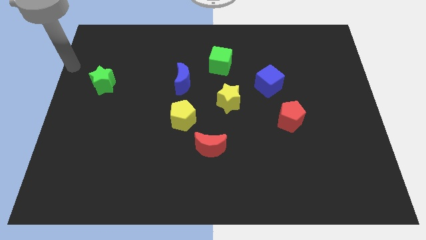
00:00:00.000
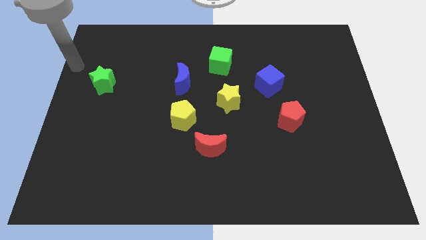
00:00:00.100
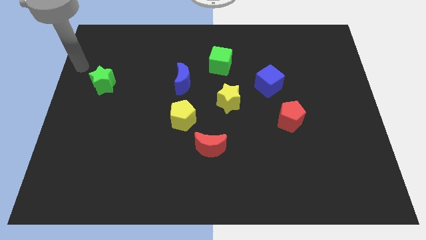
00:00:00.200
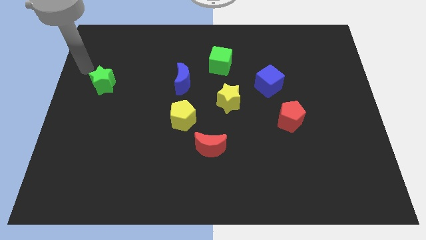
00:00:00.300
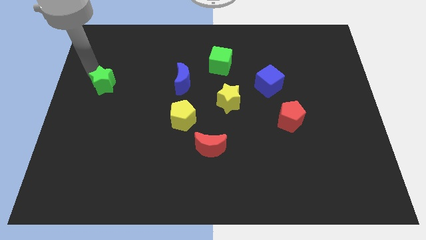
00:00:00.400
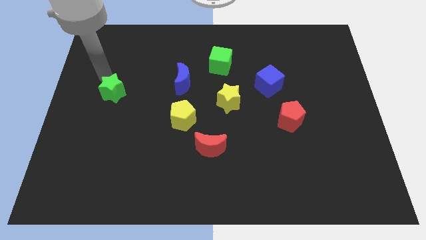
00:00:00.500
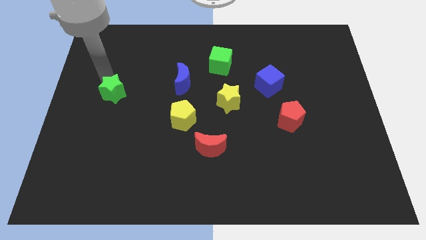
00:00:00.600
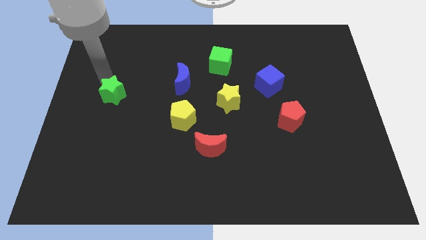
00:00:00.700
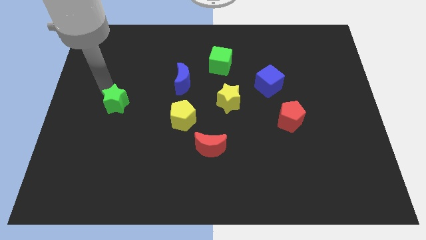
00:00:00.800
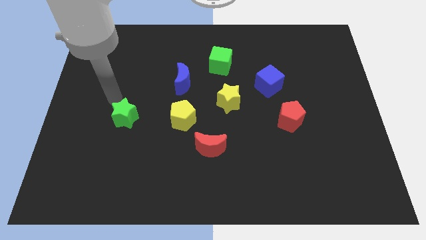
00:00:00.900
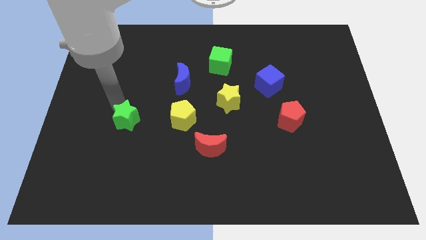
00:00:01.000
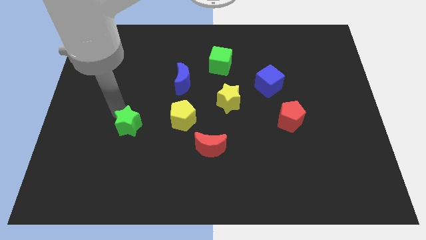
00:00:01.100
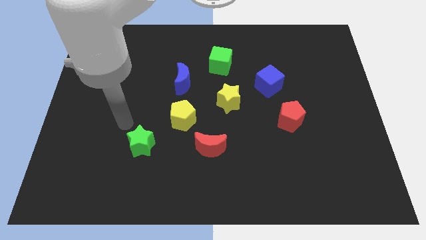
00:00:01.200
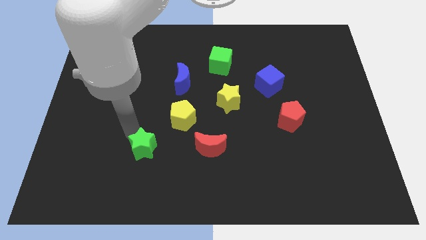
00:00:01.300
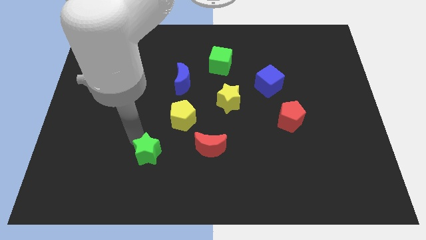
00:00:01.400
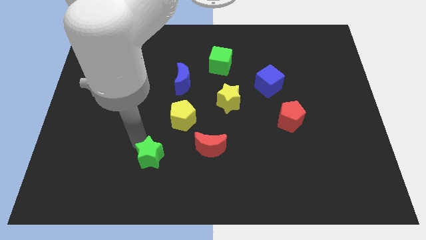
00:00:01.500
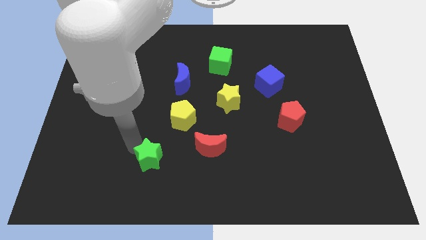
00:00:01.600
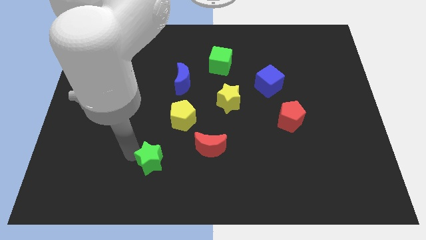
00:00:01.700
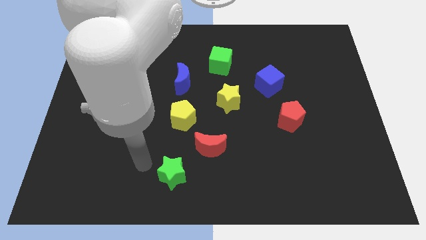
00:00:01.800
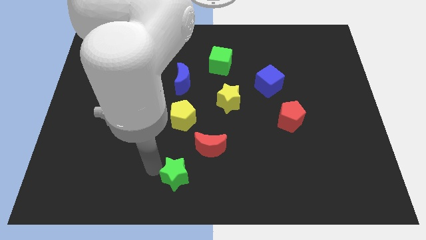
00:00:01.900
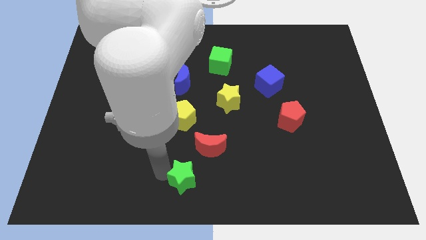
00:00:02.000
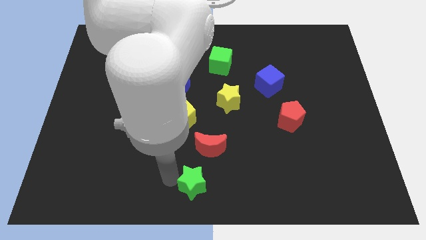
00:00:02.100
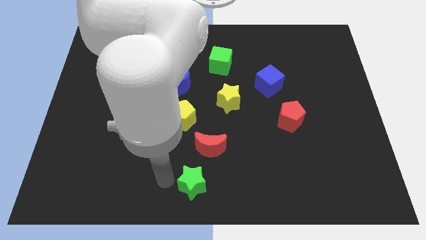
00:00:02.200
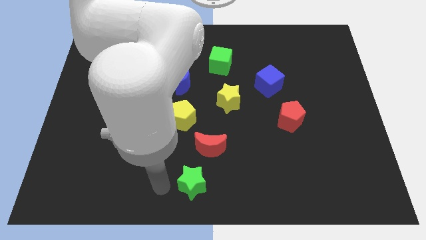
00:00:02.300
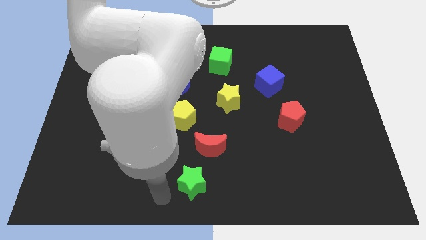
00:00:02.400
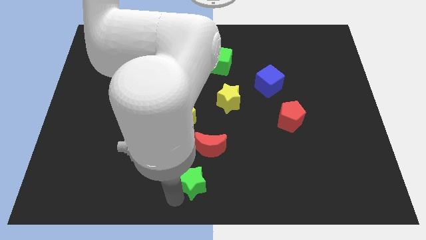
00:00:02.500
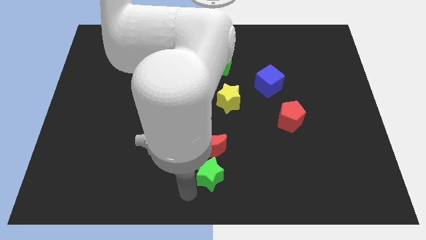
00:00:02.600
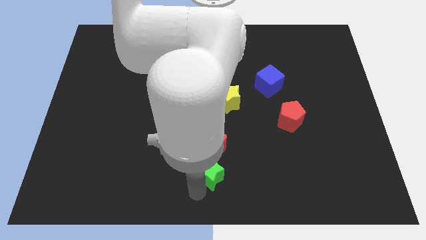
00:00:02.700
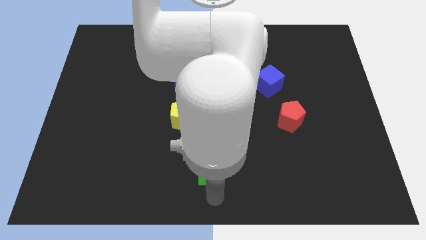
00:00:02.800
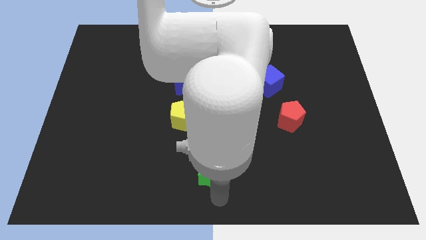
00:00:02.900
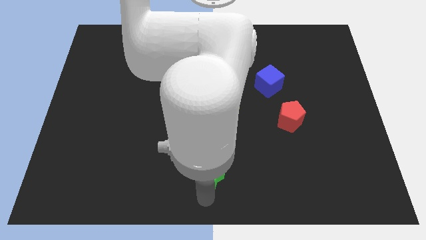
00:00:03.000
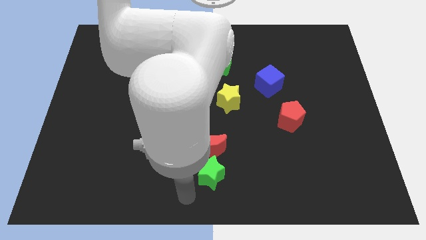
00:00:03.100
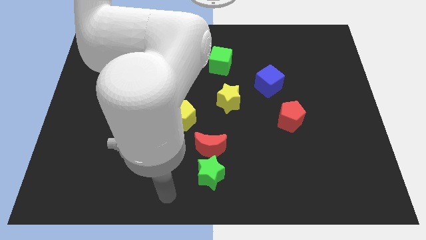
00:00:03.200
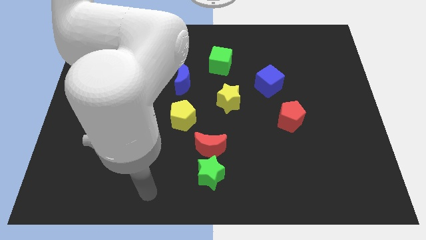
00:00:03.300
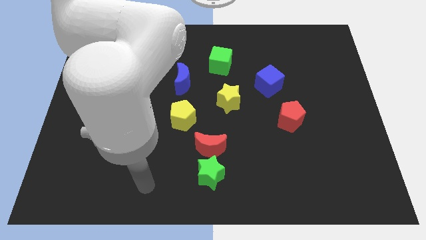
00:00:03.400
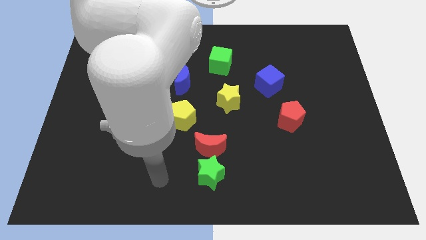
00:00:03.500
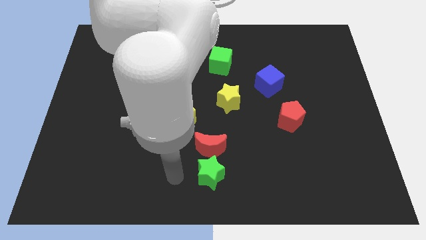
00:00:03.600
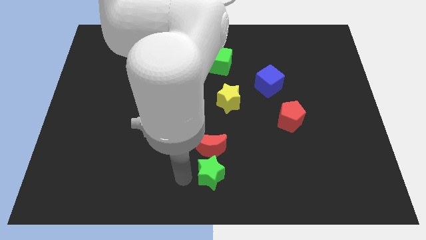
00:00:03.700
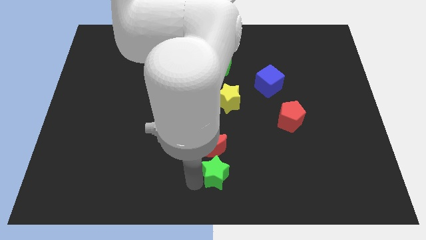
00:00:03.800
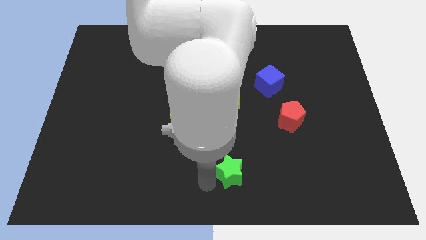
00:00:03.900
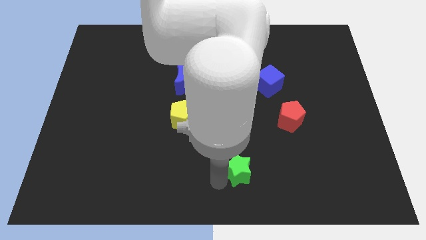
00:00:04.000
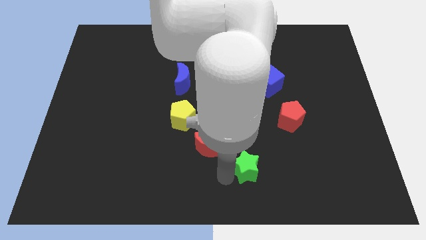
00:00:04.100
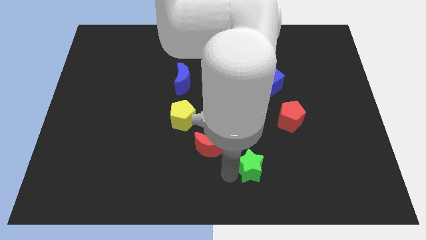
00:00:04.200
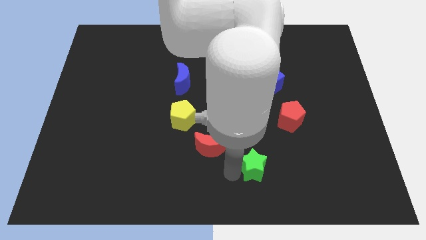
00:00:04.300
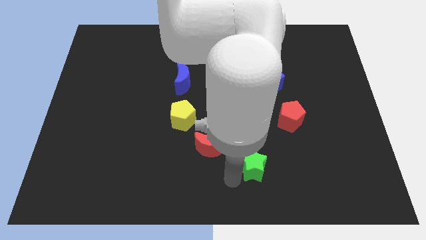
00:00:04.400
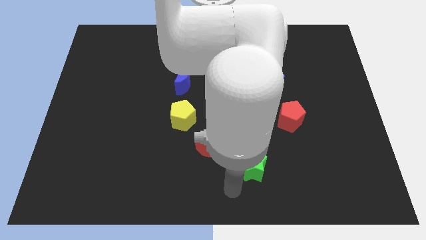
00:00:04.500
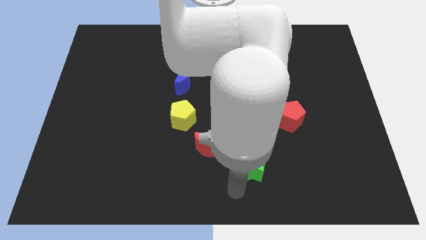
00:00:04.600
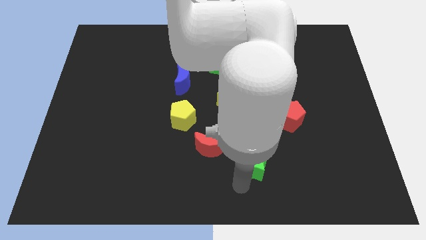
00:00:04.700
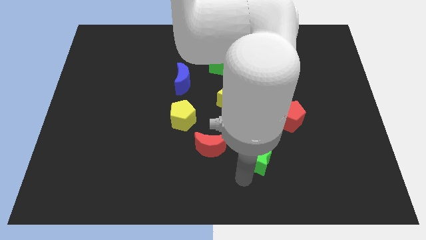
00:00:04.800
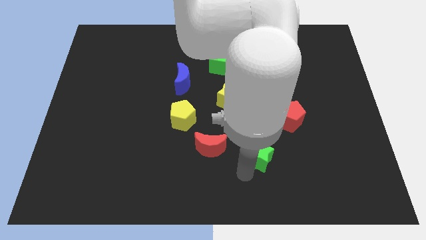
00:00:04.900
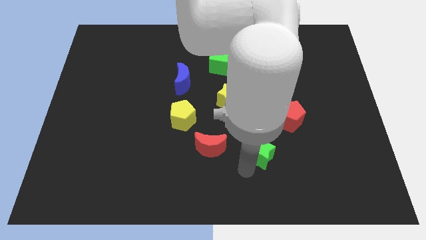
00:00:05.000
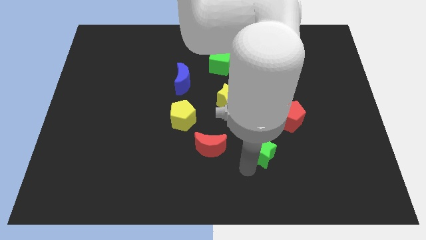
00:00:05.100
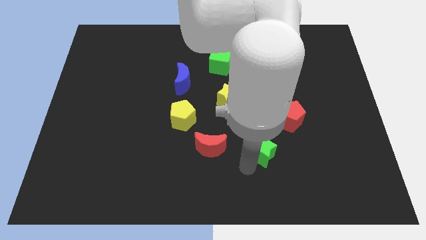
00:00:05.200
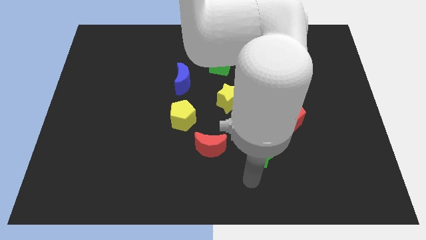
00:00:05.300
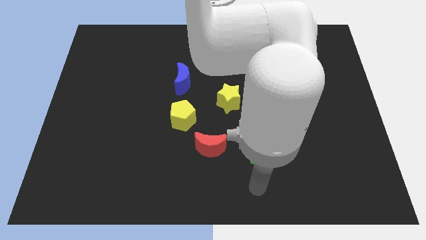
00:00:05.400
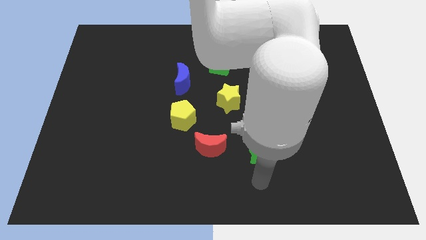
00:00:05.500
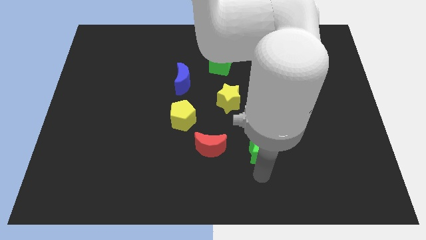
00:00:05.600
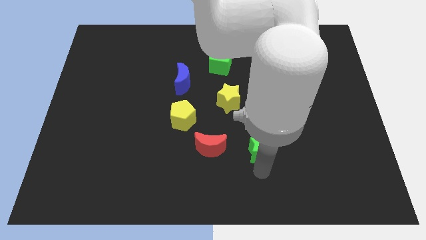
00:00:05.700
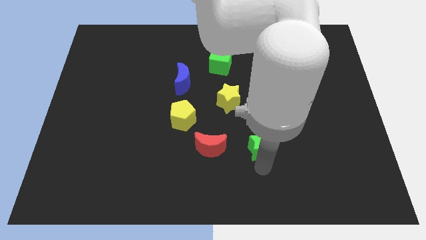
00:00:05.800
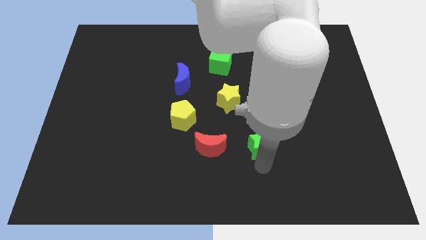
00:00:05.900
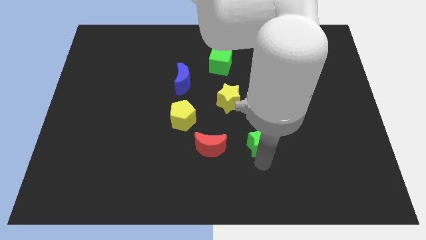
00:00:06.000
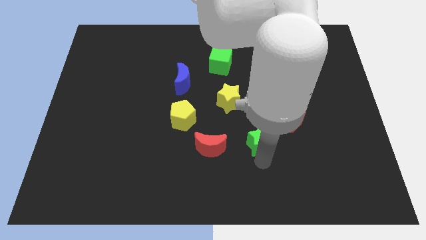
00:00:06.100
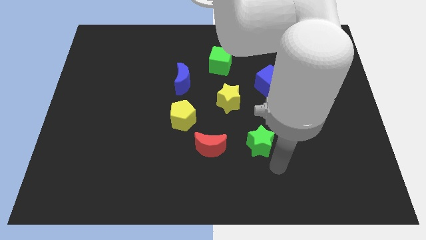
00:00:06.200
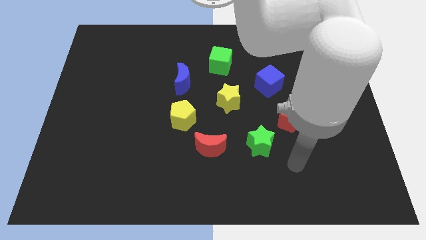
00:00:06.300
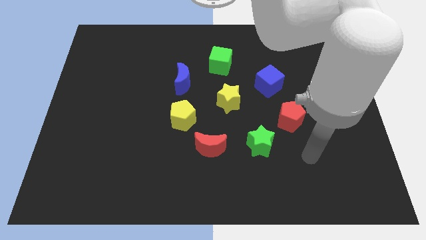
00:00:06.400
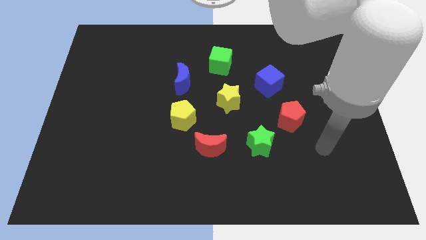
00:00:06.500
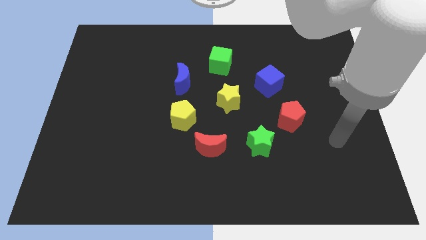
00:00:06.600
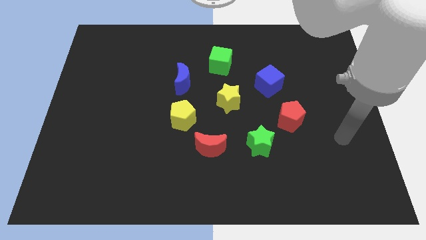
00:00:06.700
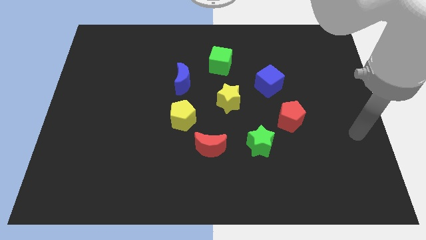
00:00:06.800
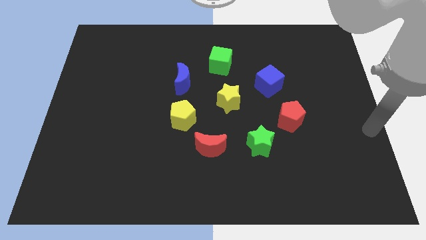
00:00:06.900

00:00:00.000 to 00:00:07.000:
place the green star at the right side of the red moon

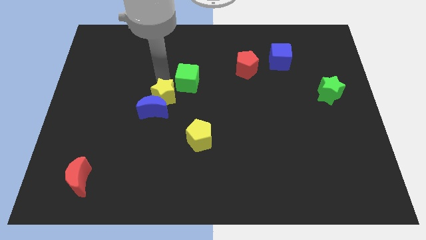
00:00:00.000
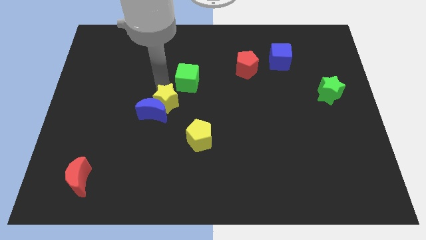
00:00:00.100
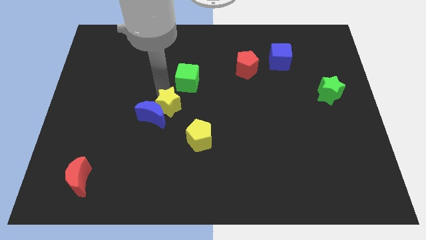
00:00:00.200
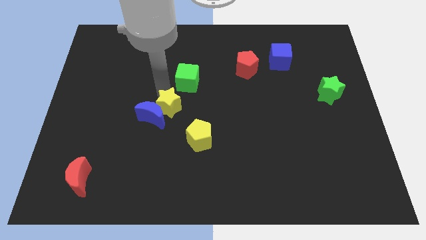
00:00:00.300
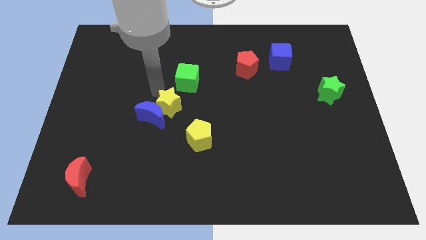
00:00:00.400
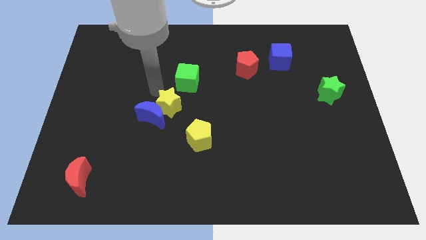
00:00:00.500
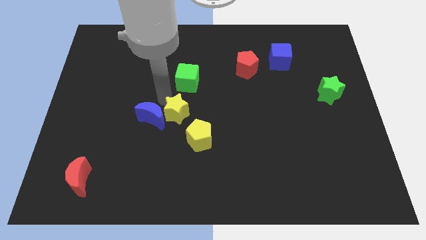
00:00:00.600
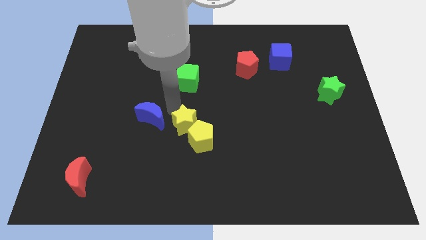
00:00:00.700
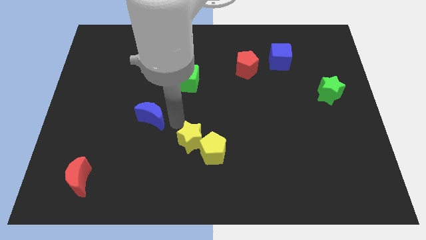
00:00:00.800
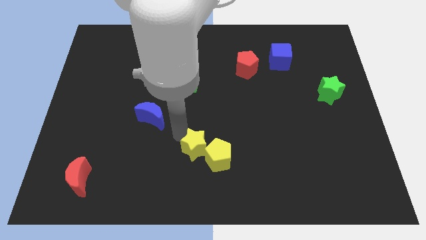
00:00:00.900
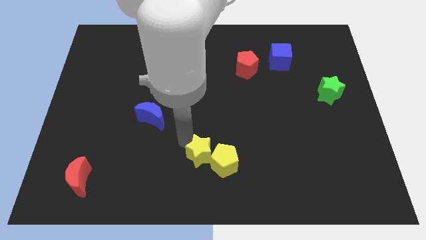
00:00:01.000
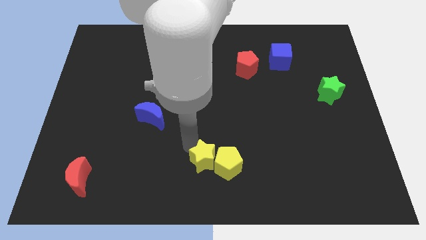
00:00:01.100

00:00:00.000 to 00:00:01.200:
push the yellow star into the yellow pentagon

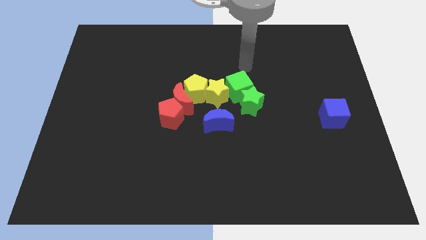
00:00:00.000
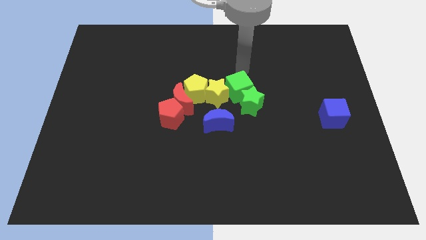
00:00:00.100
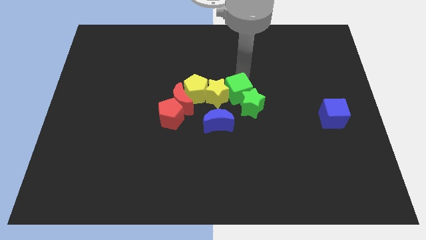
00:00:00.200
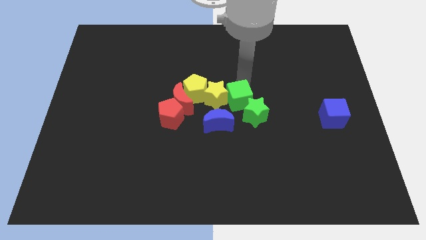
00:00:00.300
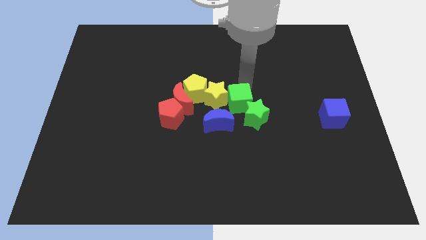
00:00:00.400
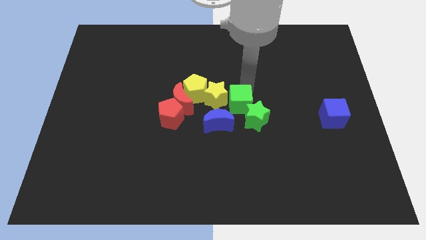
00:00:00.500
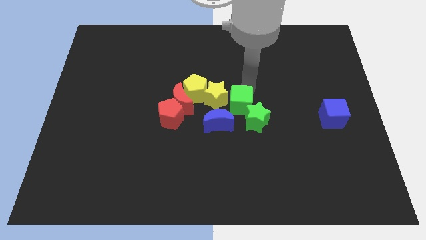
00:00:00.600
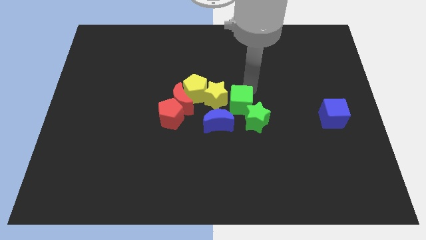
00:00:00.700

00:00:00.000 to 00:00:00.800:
push the green cube to the above the yellow star
